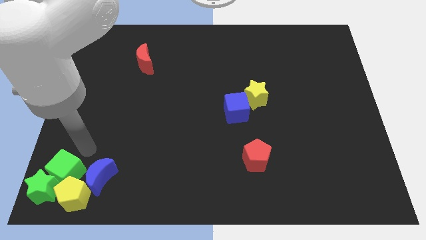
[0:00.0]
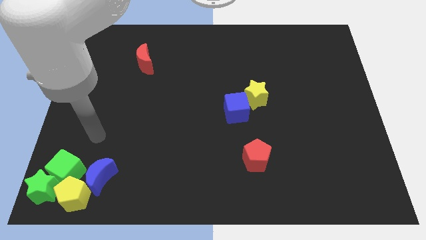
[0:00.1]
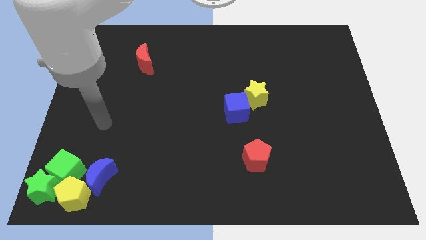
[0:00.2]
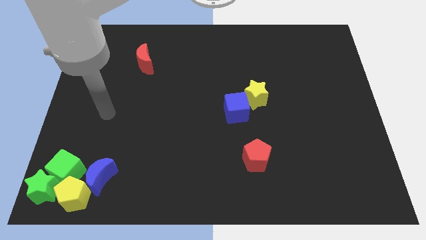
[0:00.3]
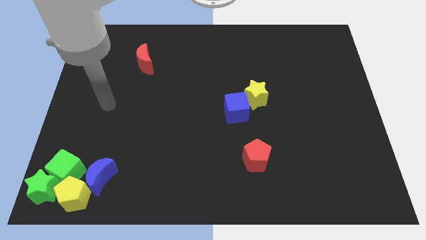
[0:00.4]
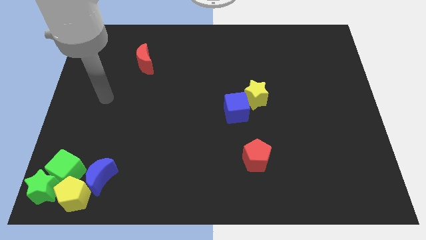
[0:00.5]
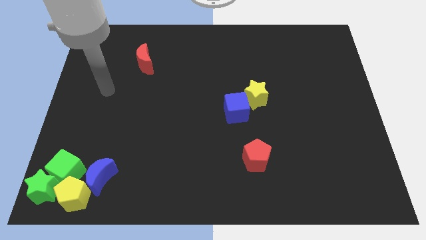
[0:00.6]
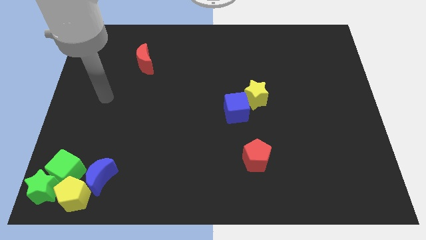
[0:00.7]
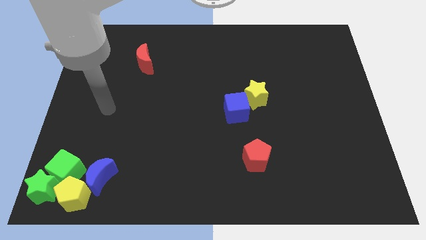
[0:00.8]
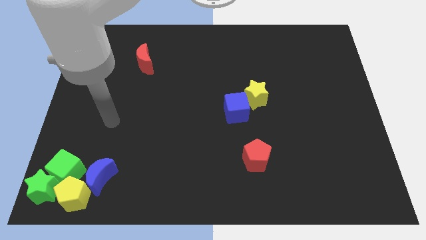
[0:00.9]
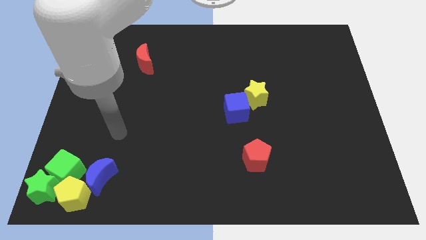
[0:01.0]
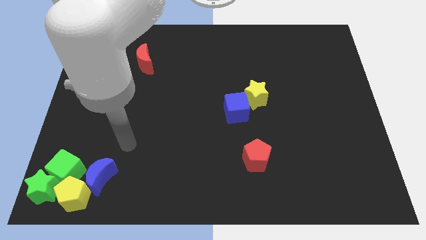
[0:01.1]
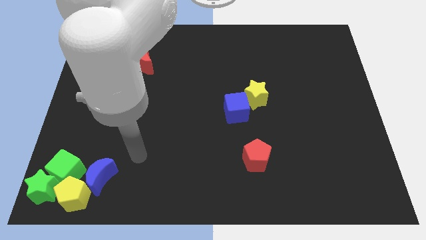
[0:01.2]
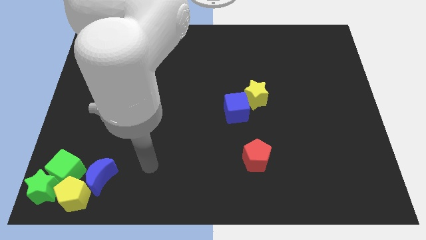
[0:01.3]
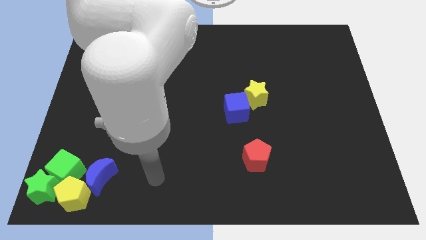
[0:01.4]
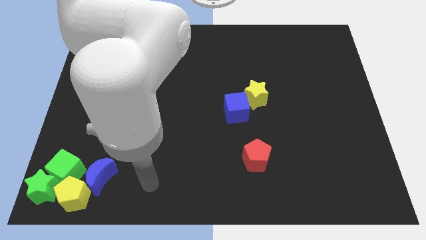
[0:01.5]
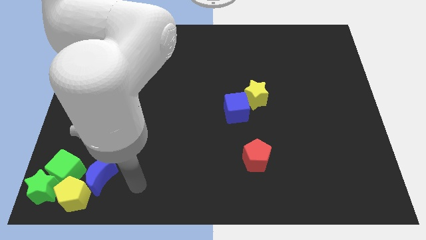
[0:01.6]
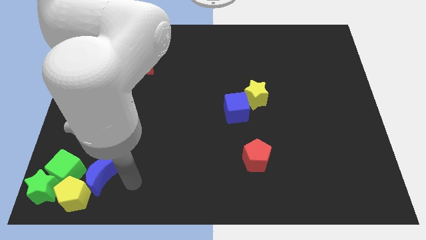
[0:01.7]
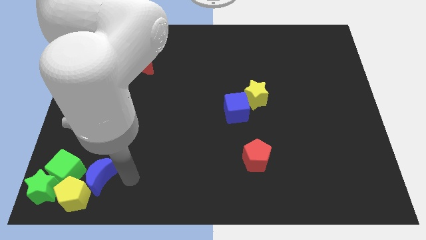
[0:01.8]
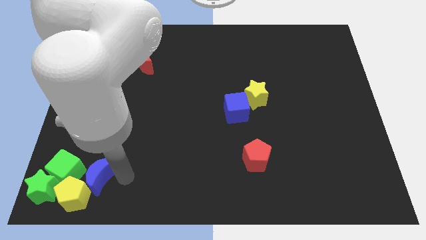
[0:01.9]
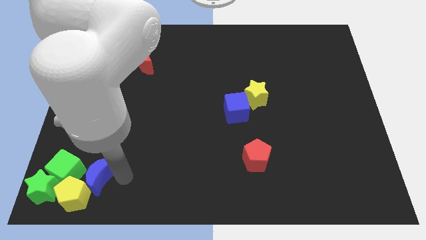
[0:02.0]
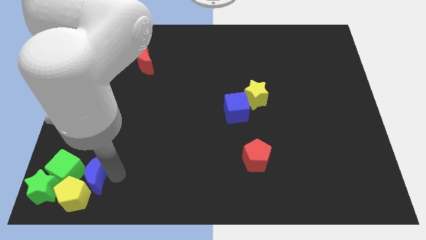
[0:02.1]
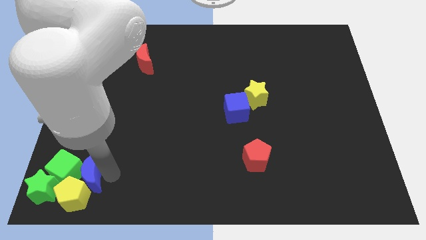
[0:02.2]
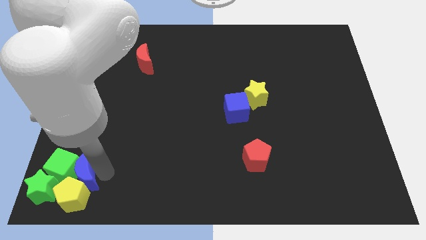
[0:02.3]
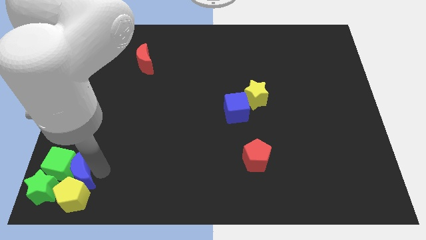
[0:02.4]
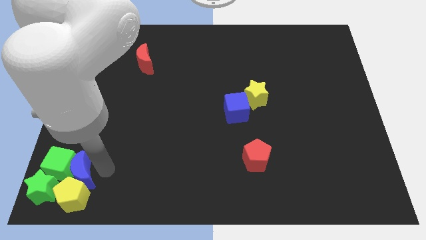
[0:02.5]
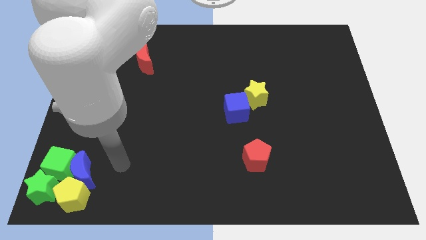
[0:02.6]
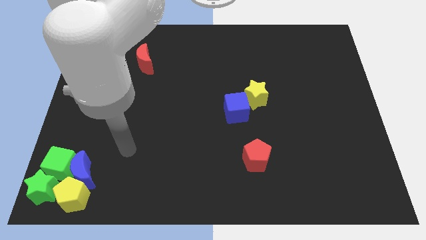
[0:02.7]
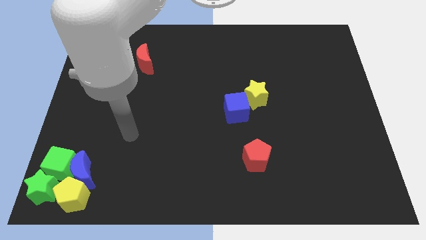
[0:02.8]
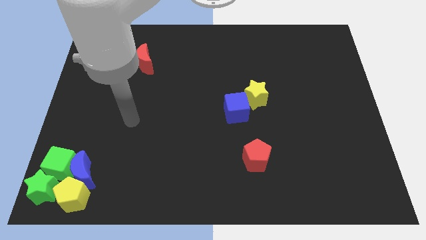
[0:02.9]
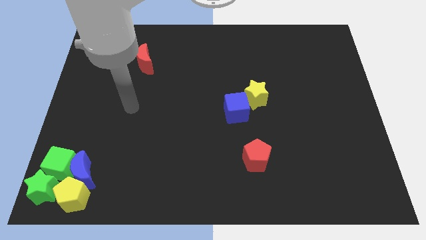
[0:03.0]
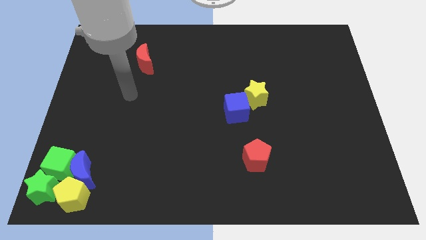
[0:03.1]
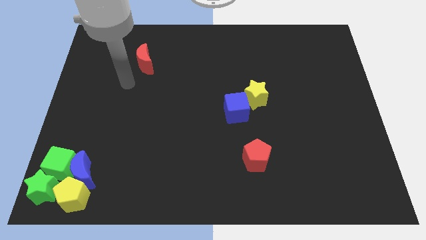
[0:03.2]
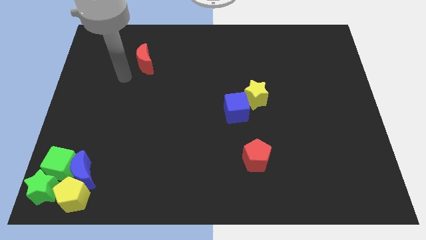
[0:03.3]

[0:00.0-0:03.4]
push the blue crescent into the green cube

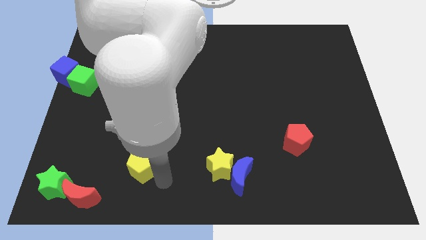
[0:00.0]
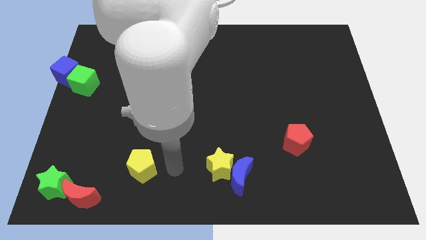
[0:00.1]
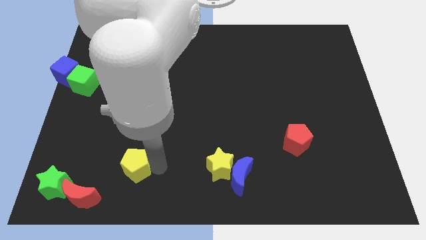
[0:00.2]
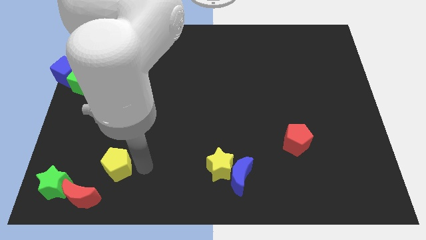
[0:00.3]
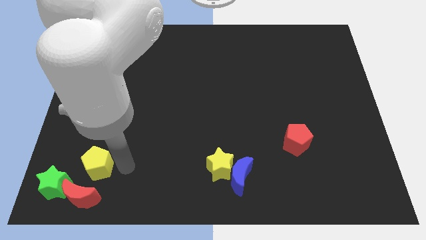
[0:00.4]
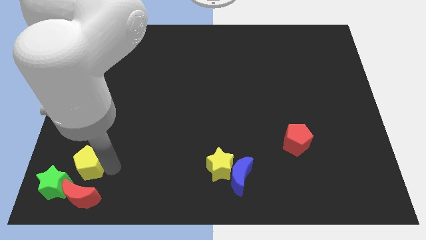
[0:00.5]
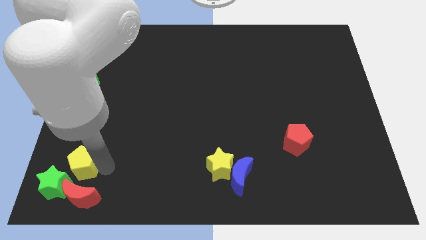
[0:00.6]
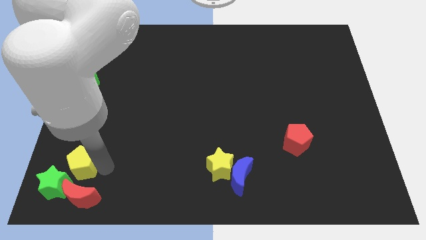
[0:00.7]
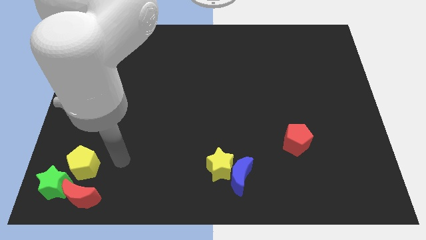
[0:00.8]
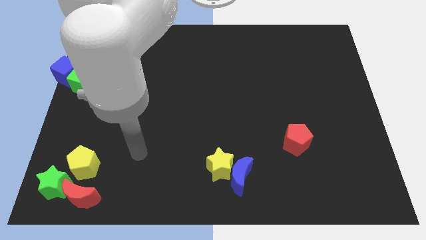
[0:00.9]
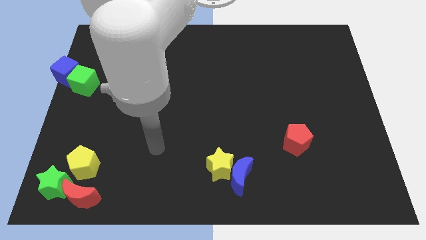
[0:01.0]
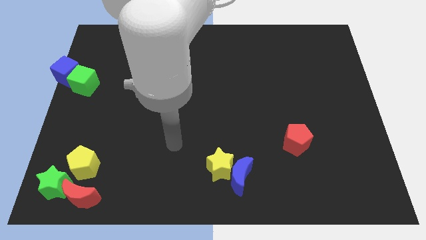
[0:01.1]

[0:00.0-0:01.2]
drag the yellow pentagon towards the green star

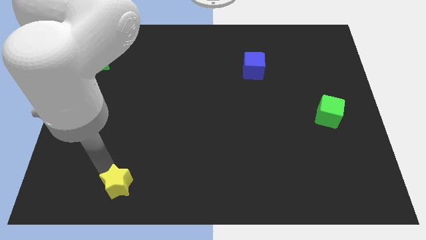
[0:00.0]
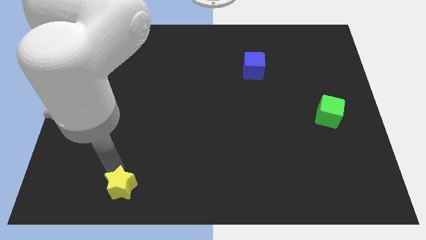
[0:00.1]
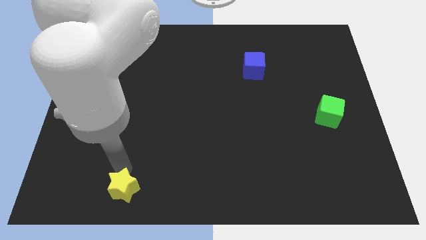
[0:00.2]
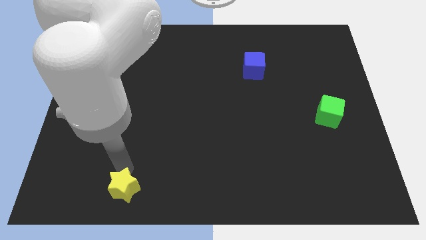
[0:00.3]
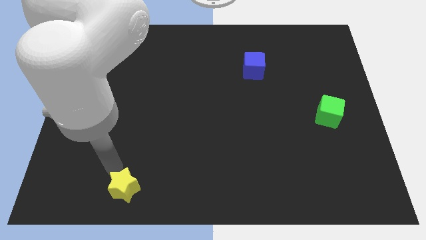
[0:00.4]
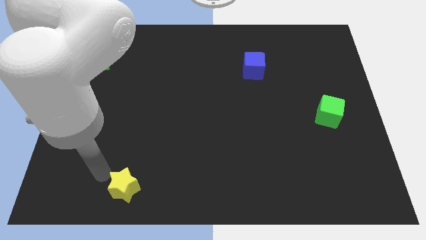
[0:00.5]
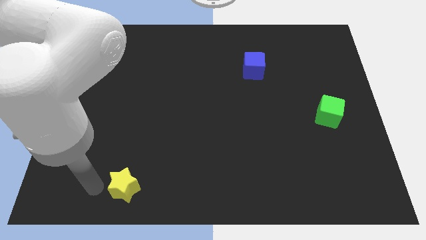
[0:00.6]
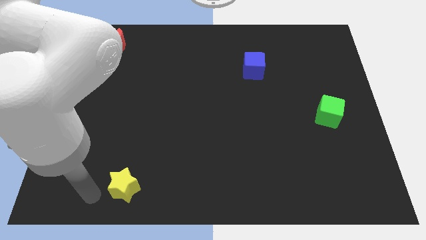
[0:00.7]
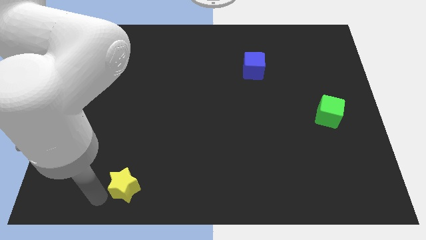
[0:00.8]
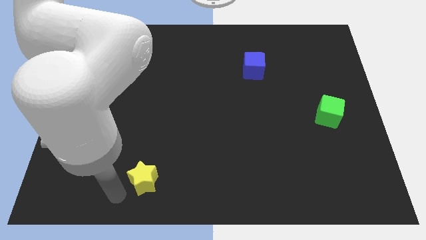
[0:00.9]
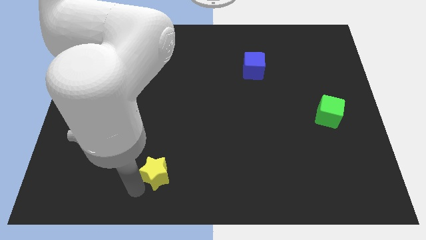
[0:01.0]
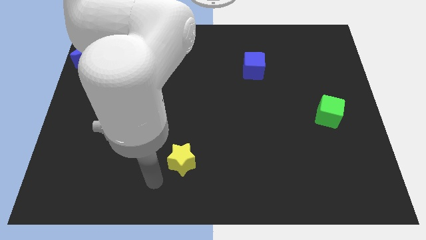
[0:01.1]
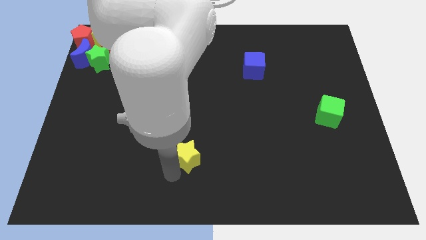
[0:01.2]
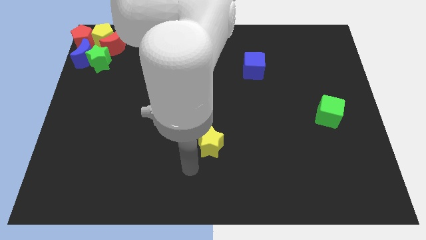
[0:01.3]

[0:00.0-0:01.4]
push the yellow star towards the center

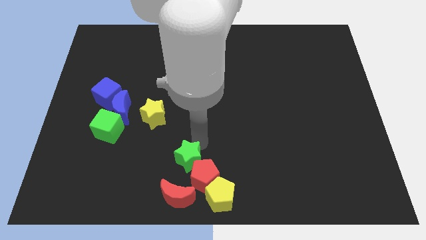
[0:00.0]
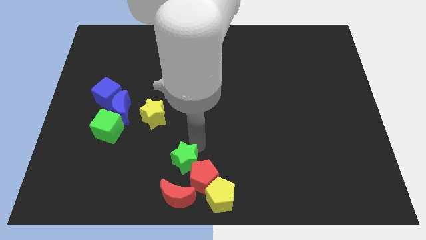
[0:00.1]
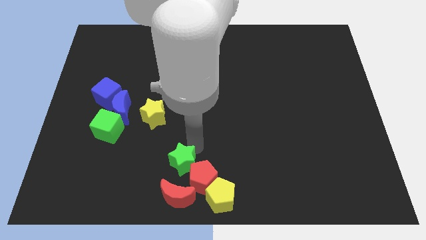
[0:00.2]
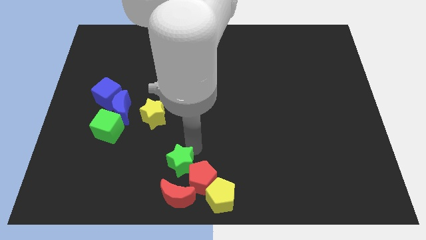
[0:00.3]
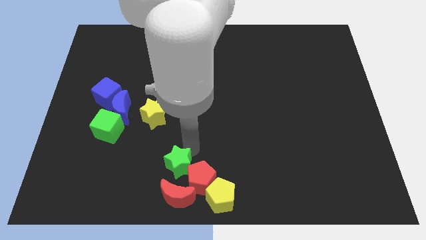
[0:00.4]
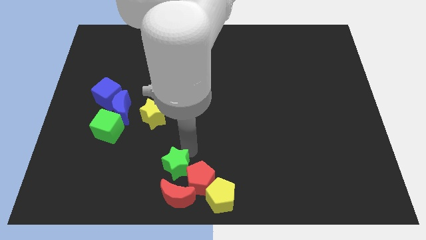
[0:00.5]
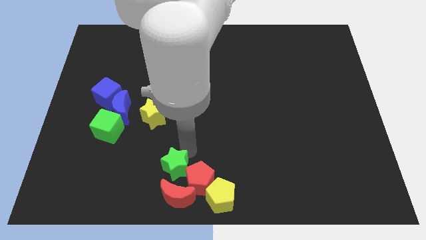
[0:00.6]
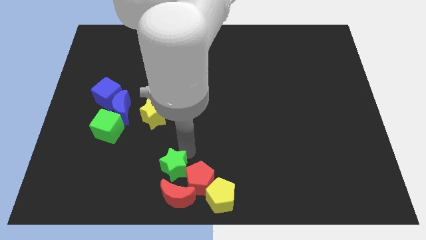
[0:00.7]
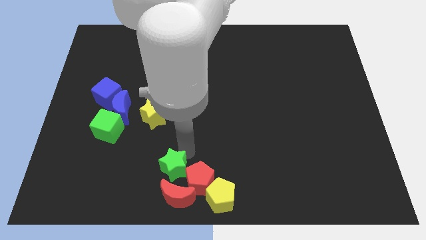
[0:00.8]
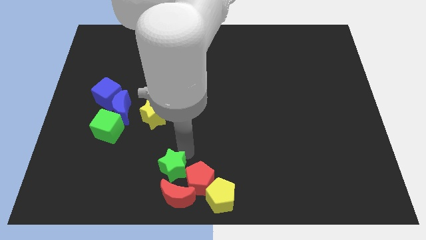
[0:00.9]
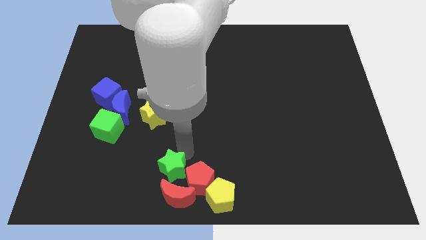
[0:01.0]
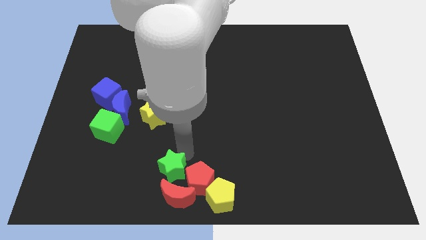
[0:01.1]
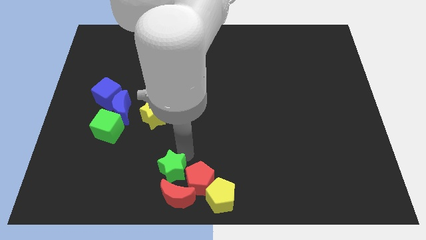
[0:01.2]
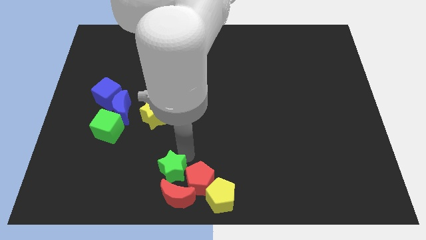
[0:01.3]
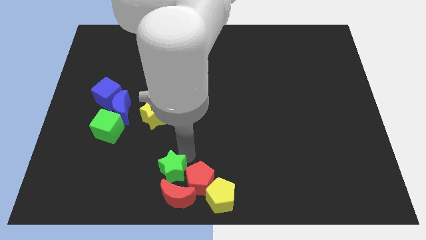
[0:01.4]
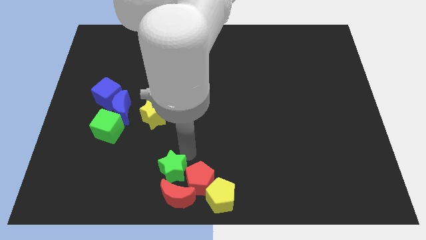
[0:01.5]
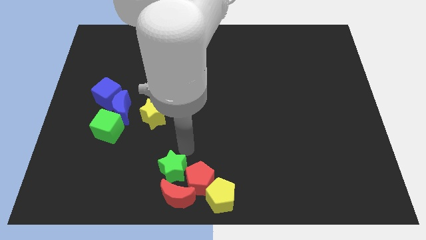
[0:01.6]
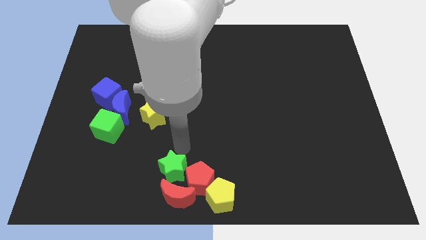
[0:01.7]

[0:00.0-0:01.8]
push the green star to the left of the red pentagon

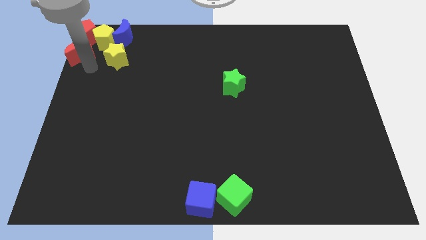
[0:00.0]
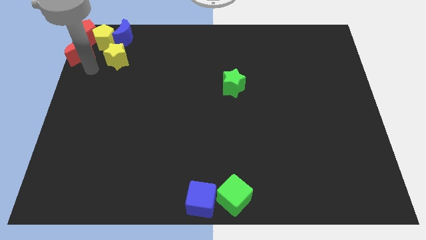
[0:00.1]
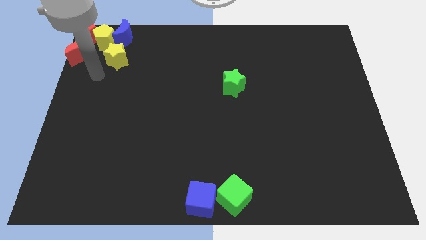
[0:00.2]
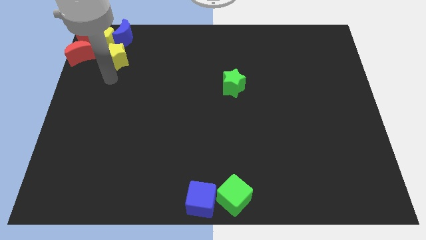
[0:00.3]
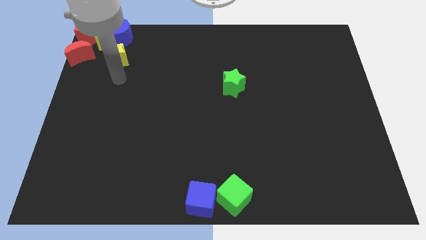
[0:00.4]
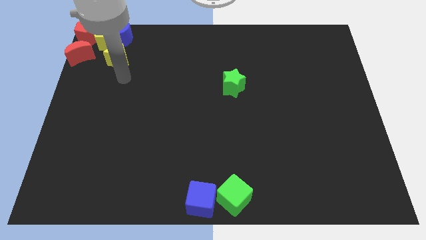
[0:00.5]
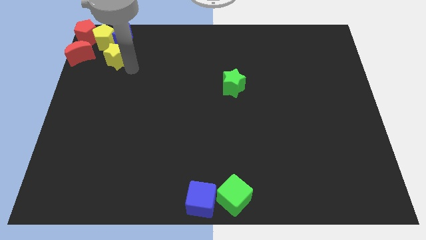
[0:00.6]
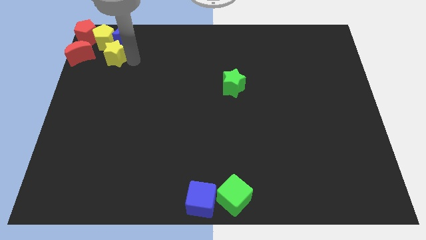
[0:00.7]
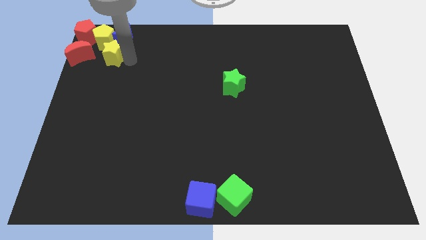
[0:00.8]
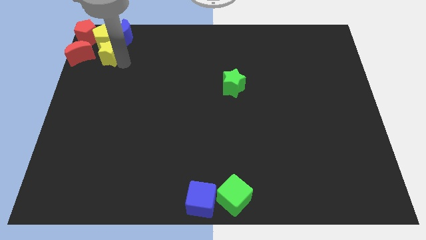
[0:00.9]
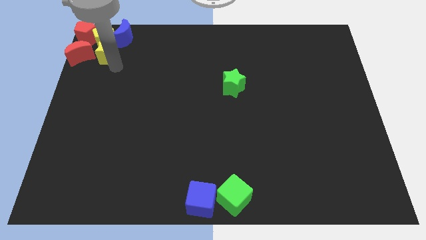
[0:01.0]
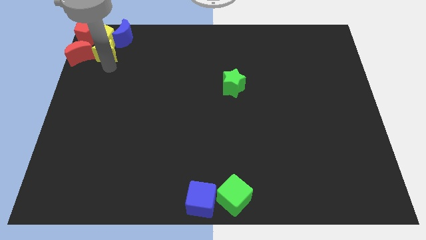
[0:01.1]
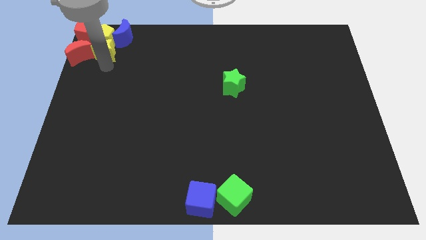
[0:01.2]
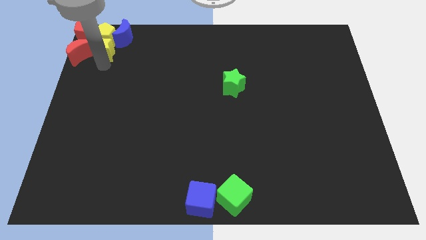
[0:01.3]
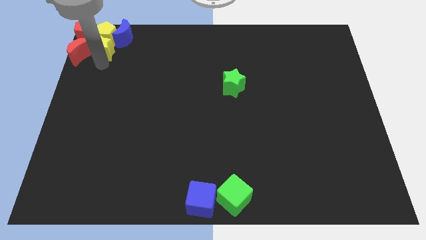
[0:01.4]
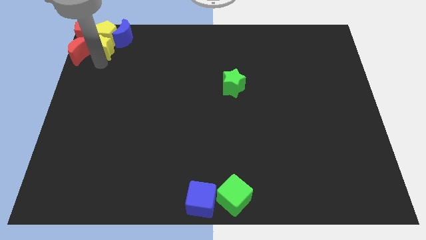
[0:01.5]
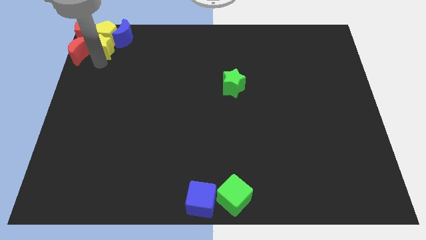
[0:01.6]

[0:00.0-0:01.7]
move the yellow star to the bottom of the yellow pentagon
